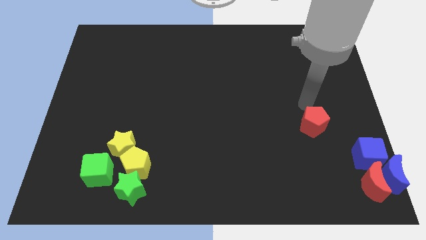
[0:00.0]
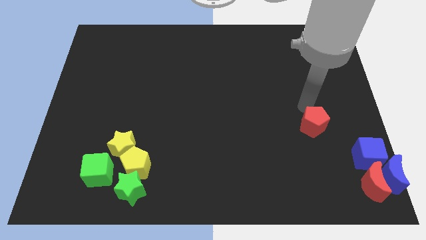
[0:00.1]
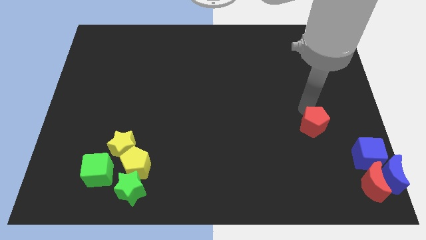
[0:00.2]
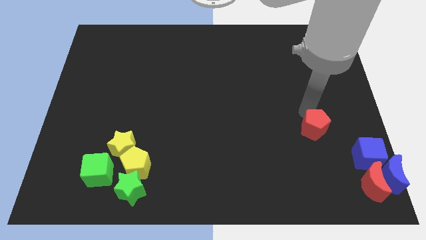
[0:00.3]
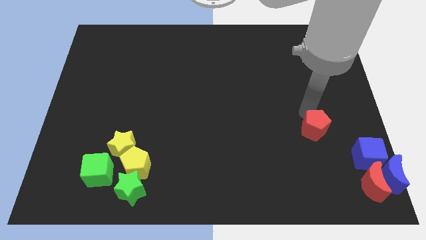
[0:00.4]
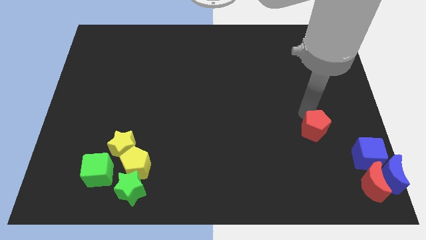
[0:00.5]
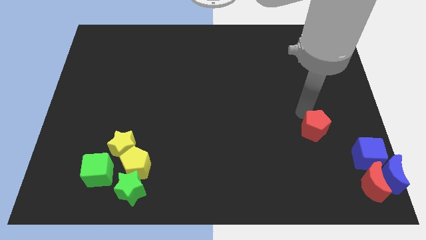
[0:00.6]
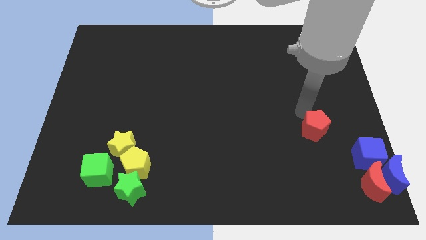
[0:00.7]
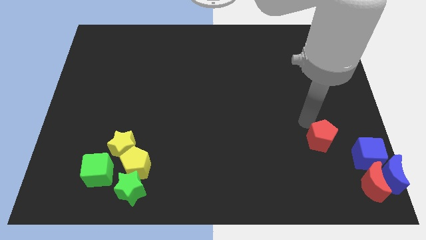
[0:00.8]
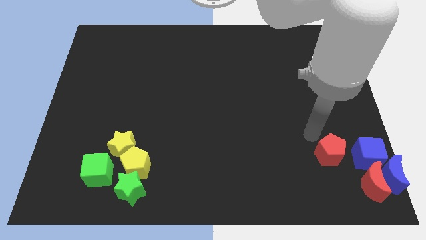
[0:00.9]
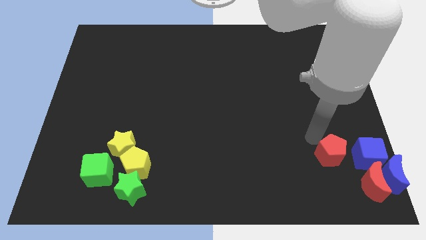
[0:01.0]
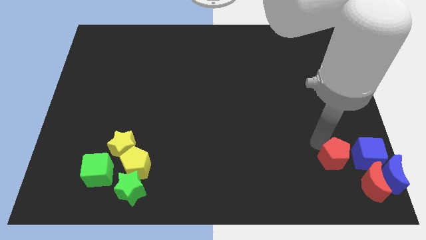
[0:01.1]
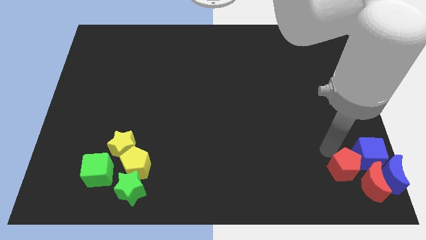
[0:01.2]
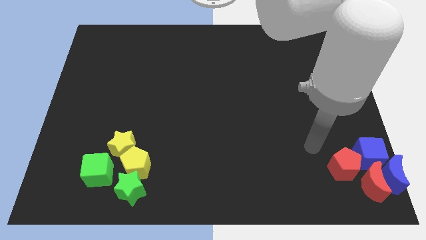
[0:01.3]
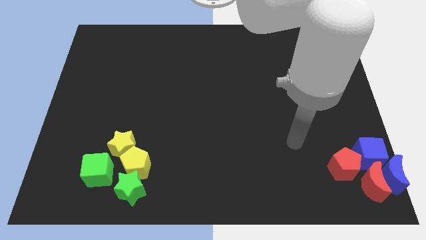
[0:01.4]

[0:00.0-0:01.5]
push the red pentagon closer to the red moon

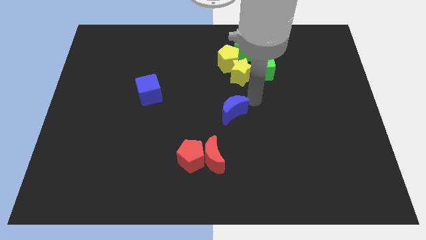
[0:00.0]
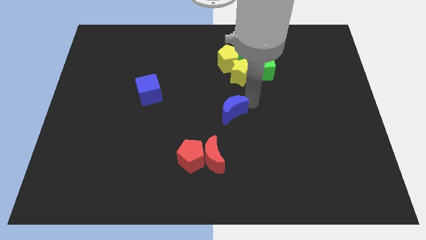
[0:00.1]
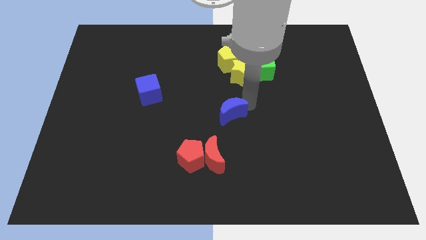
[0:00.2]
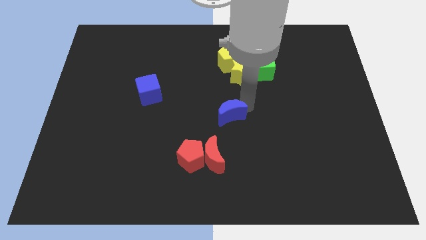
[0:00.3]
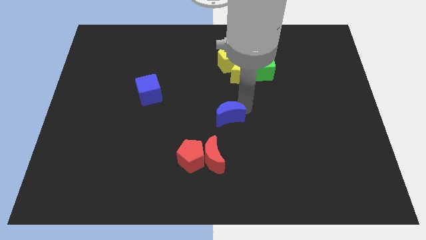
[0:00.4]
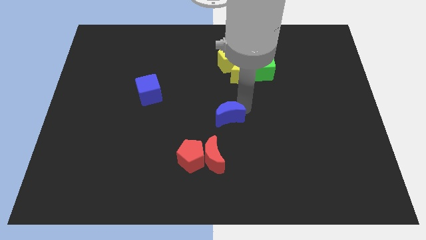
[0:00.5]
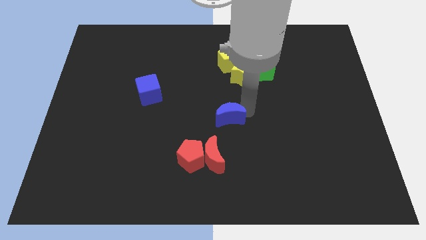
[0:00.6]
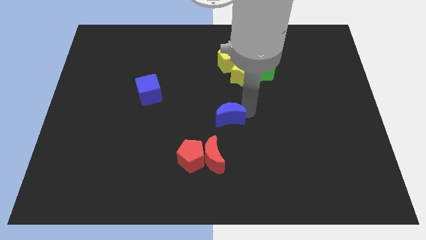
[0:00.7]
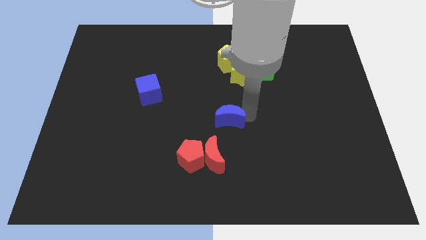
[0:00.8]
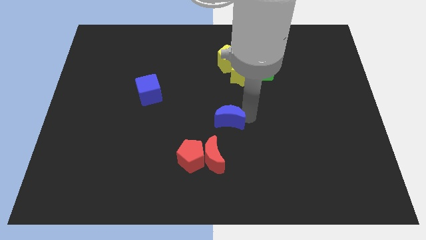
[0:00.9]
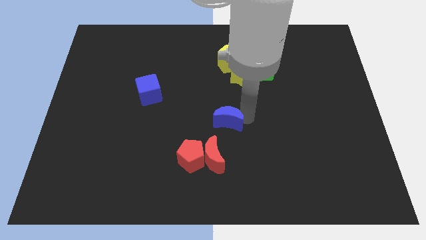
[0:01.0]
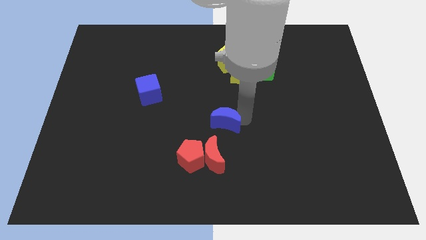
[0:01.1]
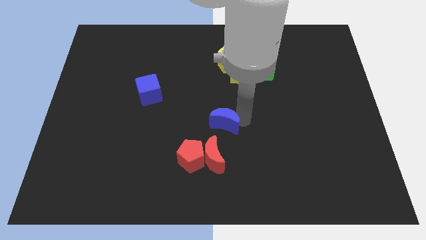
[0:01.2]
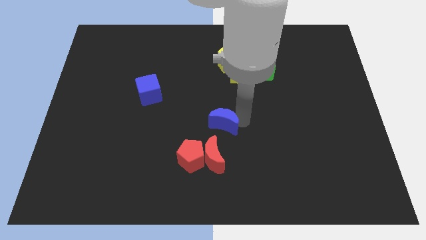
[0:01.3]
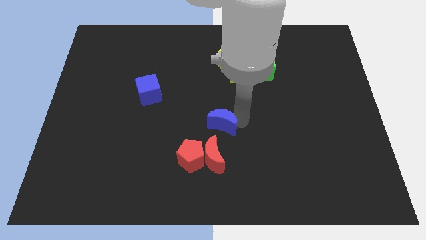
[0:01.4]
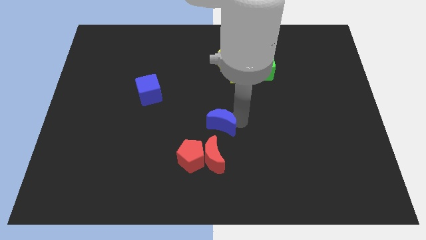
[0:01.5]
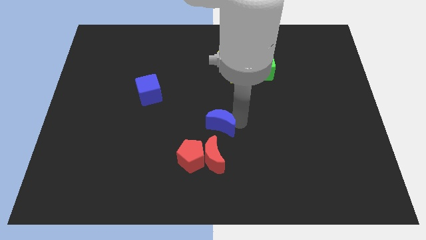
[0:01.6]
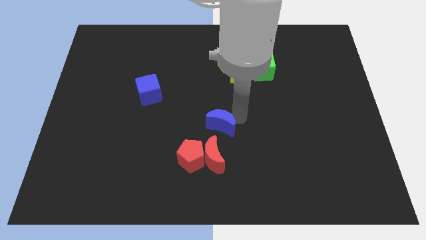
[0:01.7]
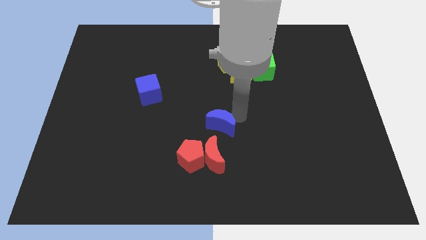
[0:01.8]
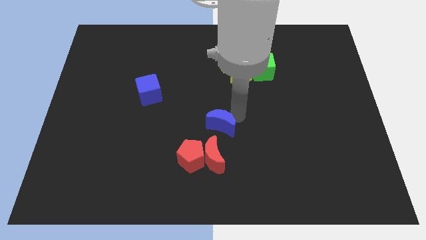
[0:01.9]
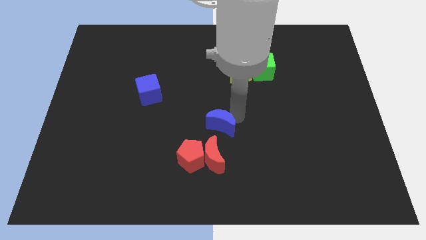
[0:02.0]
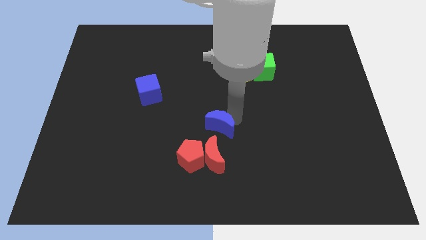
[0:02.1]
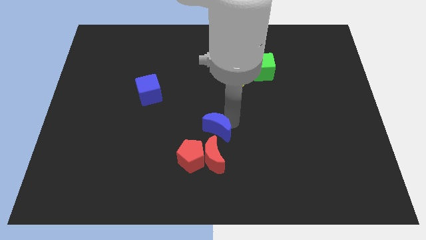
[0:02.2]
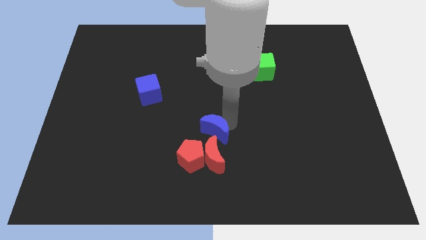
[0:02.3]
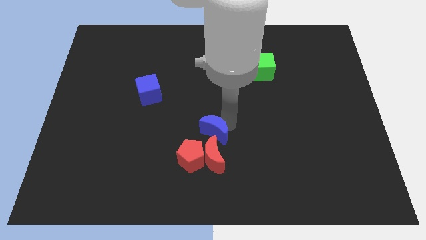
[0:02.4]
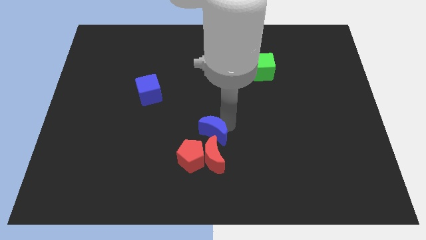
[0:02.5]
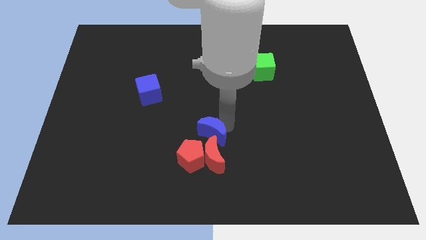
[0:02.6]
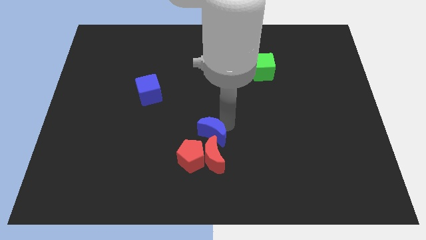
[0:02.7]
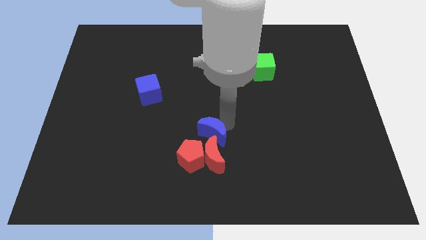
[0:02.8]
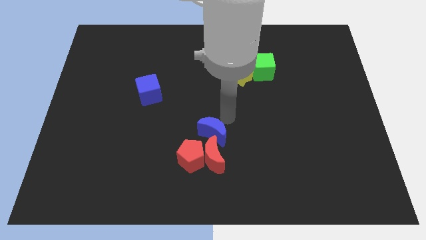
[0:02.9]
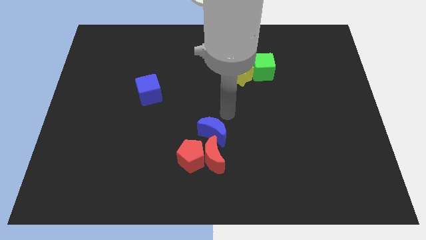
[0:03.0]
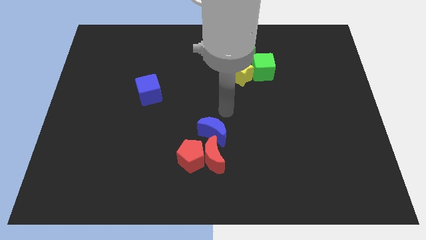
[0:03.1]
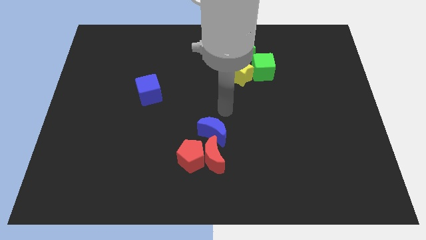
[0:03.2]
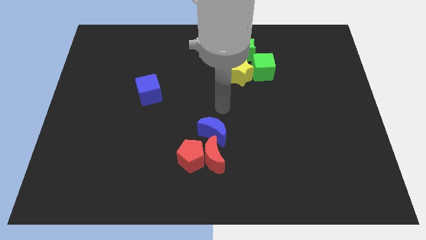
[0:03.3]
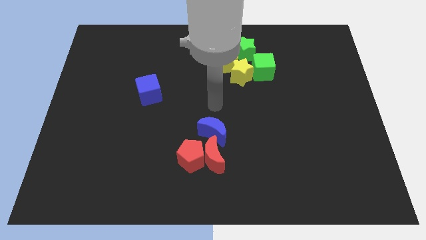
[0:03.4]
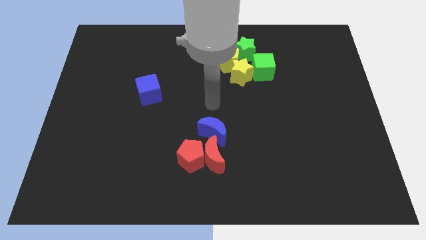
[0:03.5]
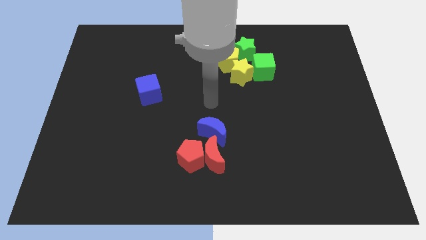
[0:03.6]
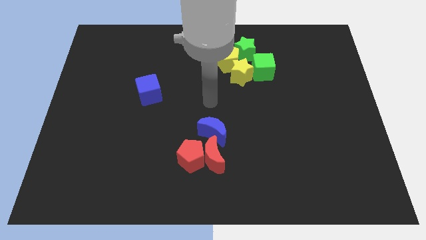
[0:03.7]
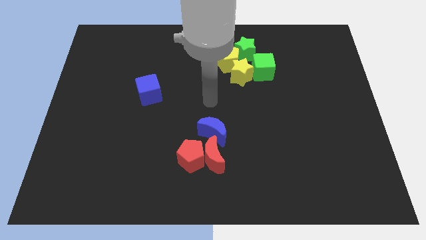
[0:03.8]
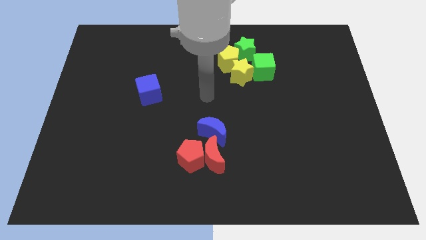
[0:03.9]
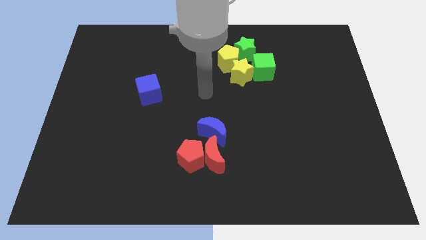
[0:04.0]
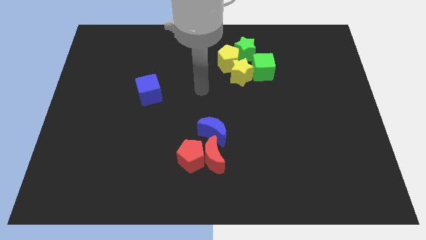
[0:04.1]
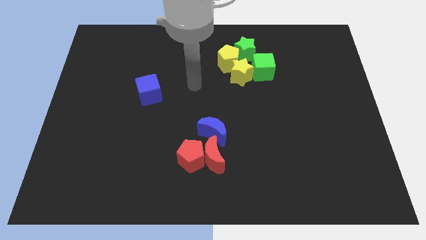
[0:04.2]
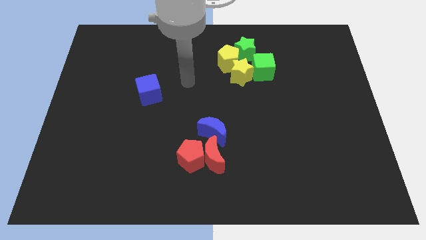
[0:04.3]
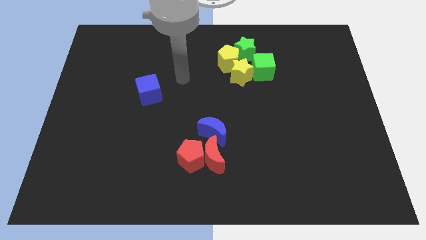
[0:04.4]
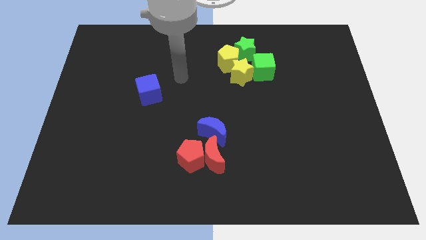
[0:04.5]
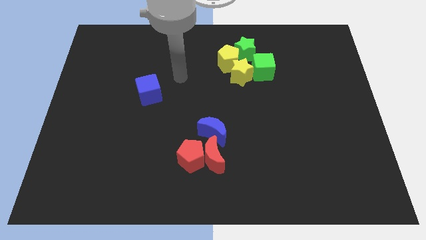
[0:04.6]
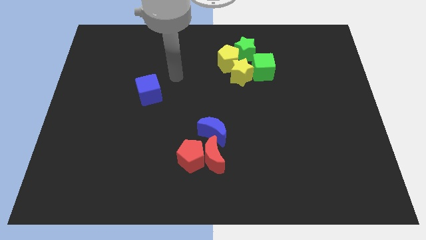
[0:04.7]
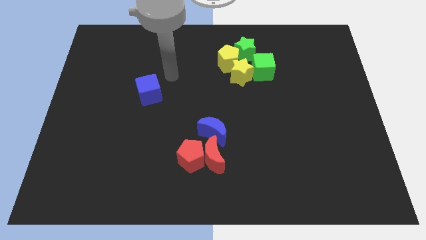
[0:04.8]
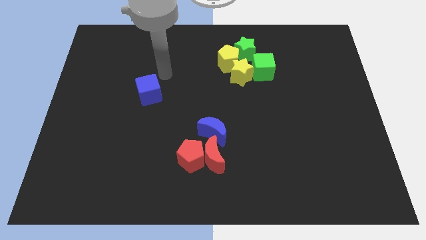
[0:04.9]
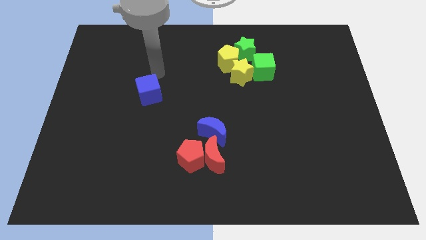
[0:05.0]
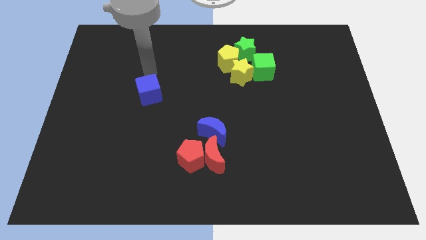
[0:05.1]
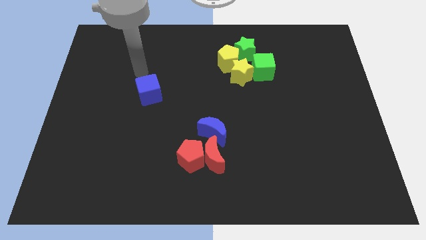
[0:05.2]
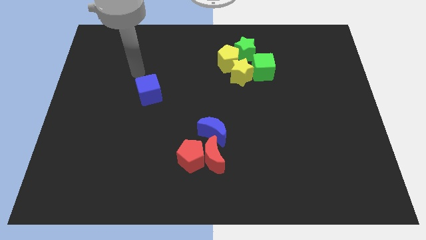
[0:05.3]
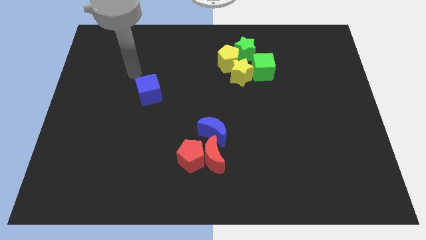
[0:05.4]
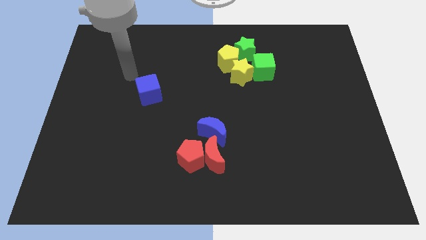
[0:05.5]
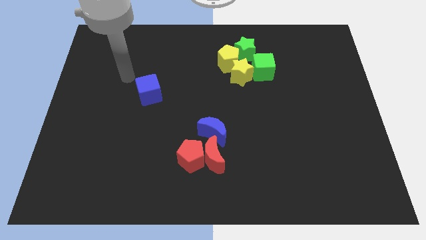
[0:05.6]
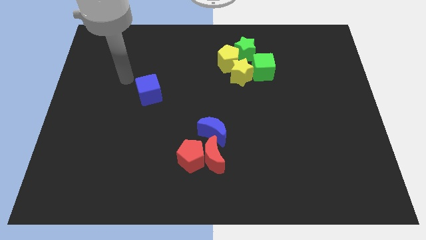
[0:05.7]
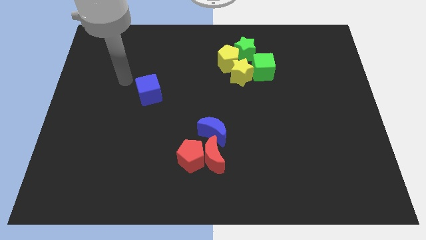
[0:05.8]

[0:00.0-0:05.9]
push the blue crescent to the top of the red crescent

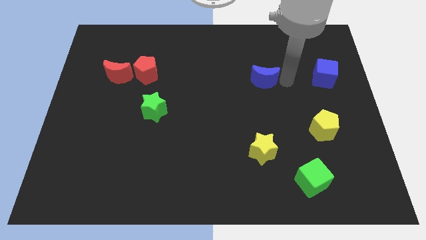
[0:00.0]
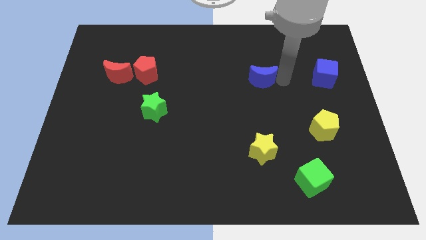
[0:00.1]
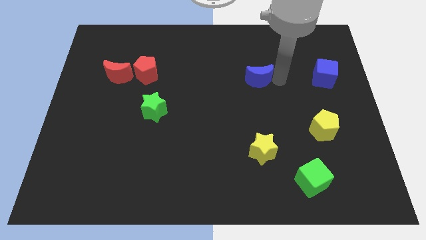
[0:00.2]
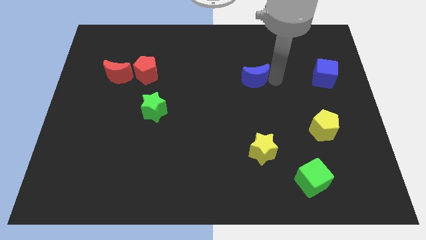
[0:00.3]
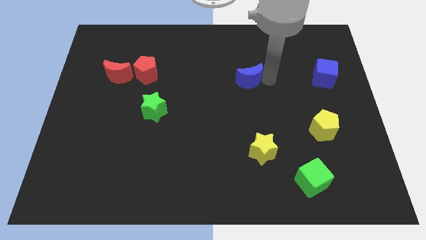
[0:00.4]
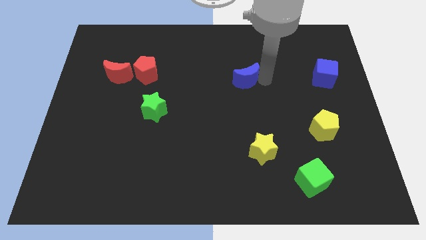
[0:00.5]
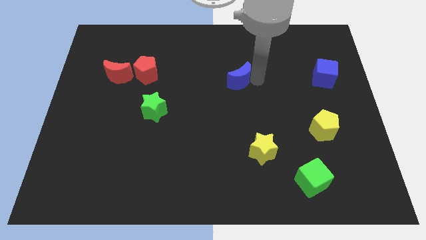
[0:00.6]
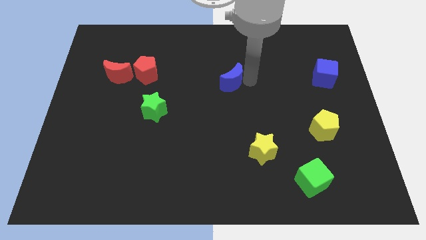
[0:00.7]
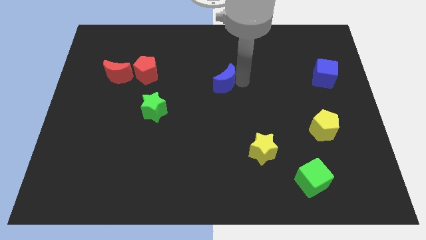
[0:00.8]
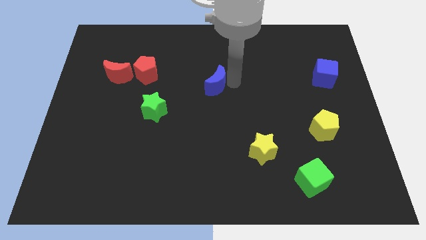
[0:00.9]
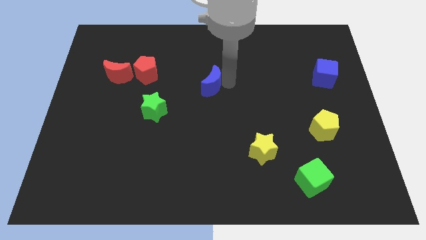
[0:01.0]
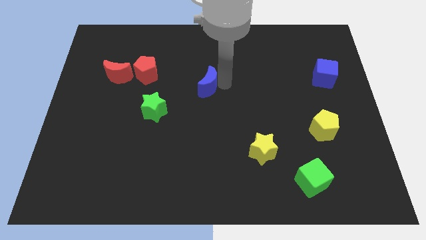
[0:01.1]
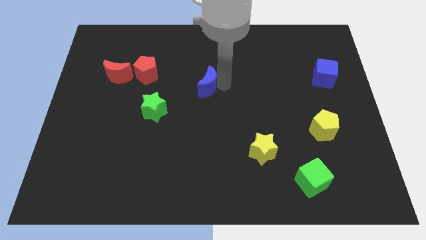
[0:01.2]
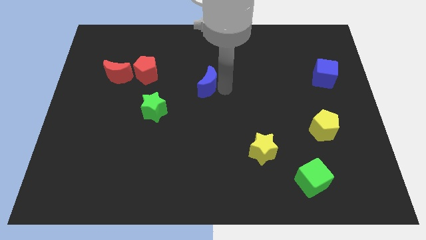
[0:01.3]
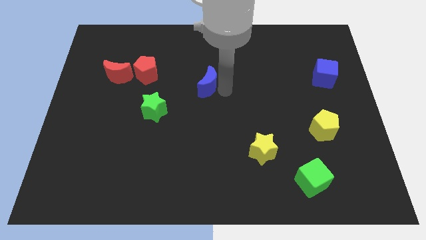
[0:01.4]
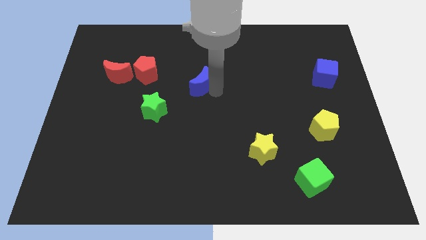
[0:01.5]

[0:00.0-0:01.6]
push the blue moon towards the left side
